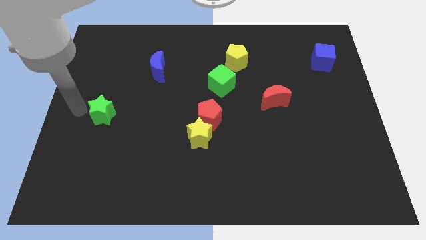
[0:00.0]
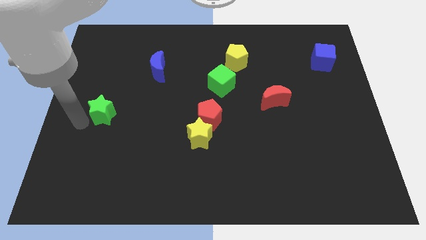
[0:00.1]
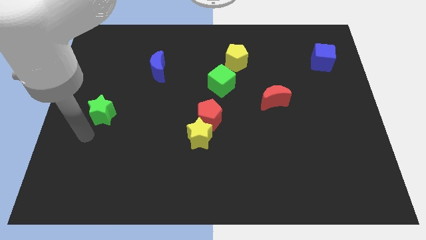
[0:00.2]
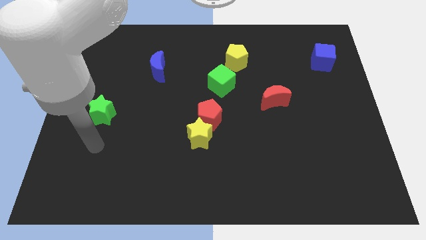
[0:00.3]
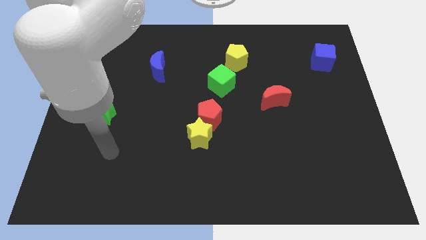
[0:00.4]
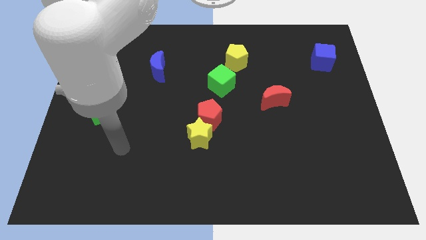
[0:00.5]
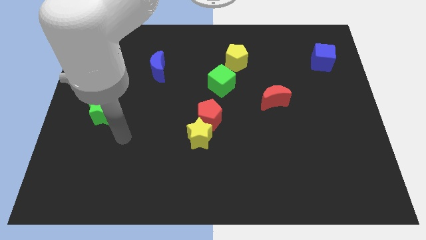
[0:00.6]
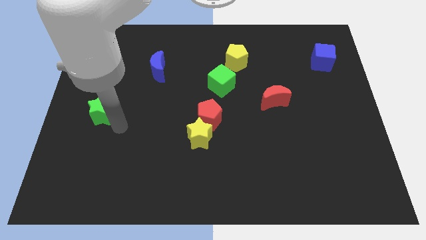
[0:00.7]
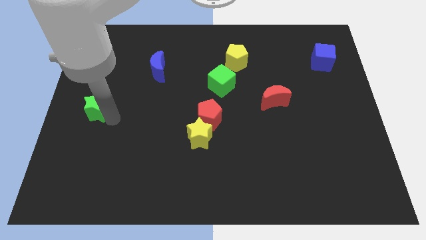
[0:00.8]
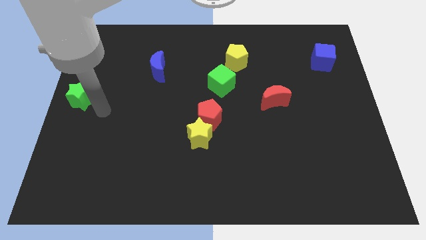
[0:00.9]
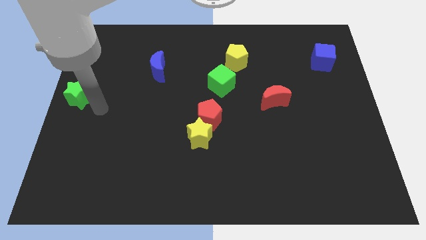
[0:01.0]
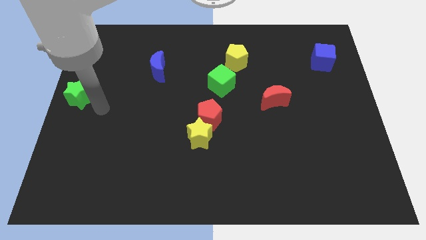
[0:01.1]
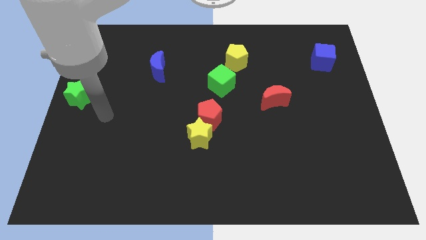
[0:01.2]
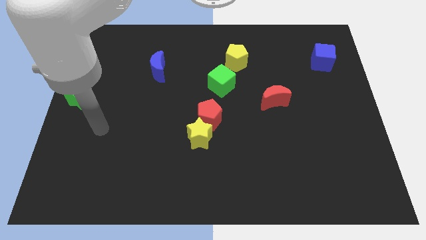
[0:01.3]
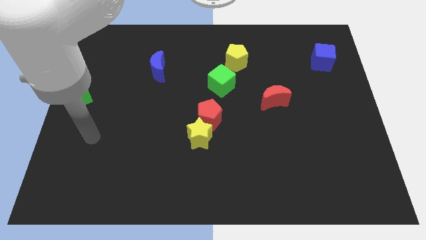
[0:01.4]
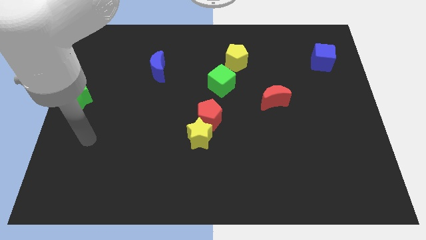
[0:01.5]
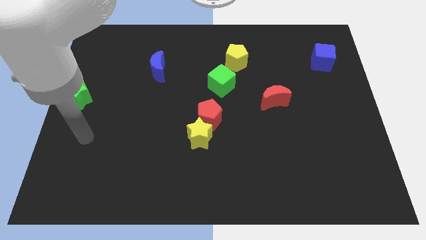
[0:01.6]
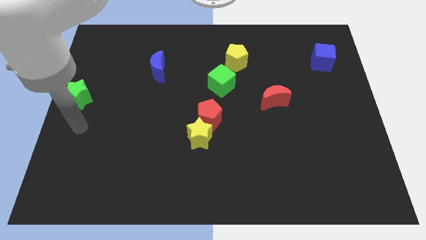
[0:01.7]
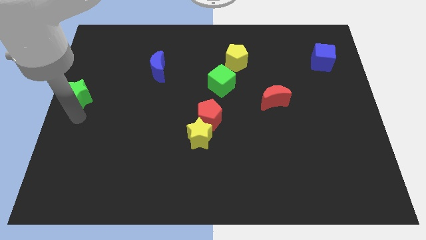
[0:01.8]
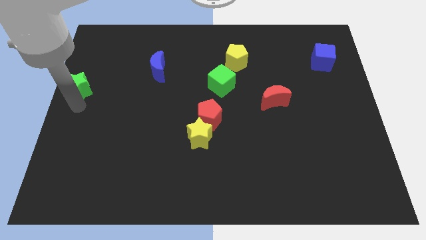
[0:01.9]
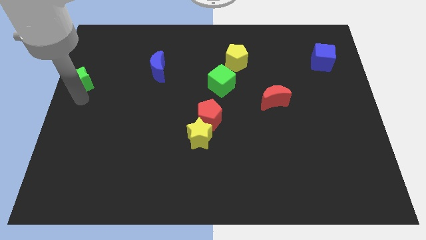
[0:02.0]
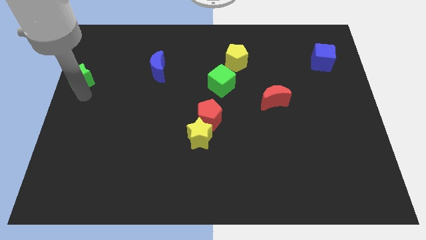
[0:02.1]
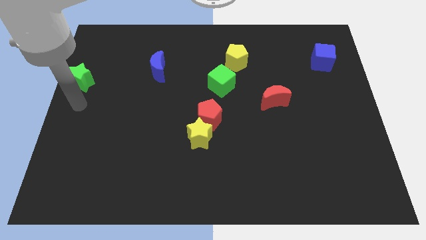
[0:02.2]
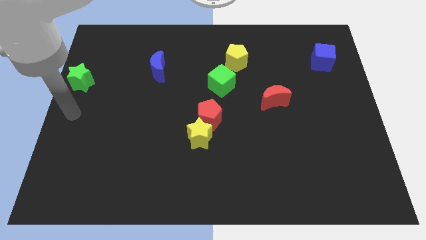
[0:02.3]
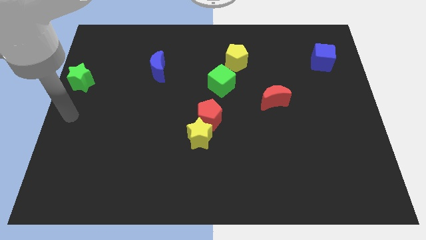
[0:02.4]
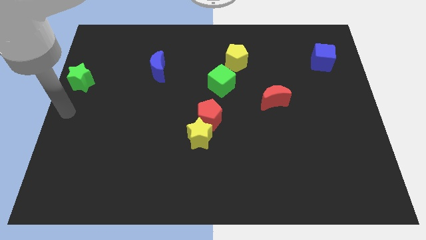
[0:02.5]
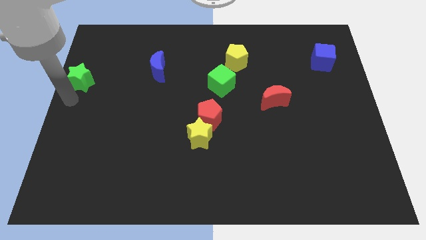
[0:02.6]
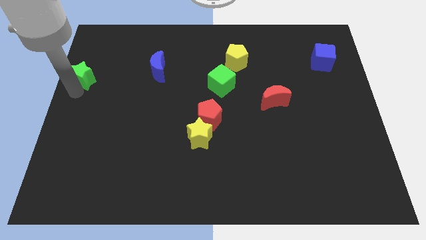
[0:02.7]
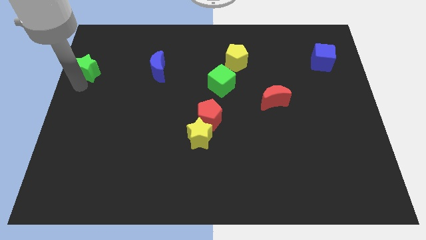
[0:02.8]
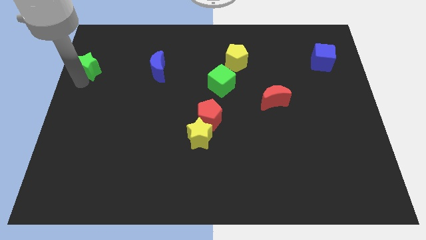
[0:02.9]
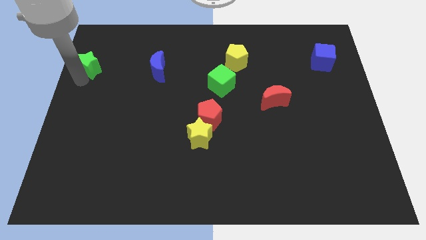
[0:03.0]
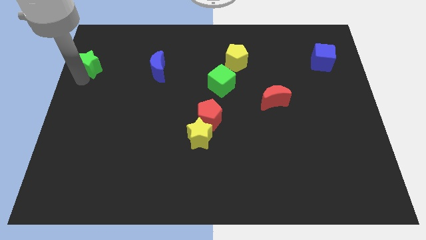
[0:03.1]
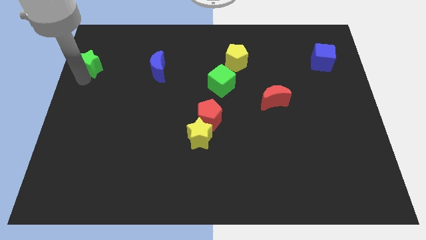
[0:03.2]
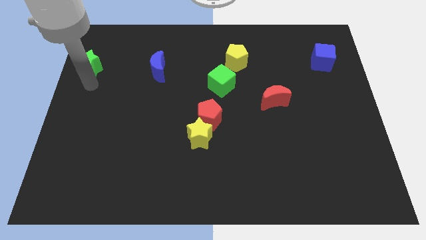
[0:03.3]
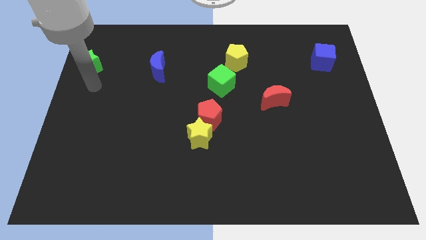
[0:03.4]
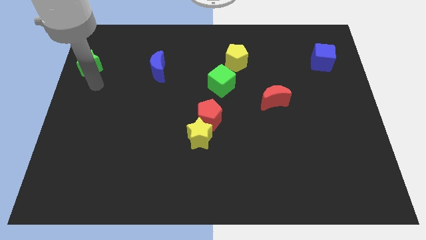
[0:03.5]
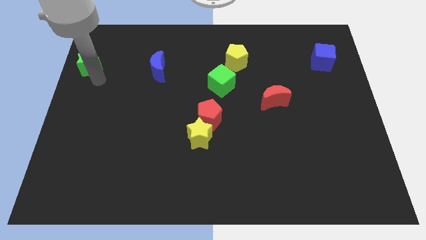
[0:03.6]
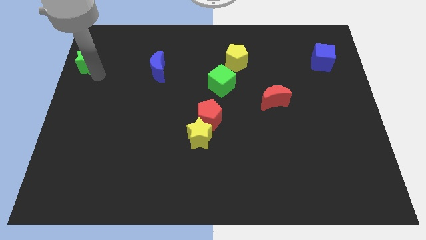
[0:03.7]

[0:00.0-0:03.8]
place green star to the left of blue moon

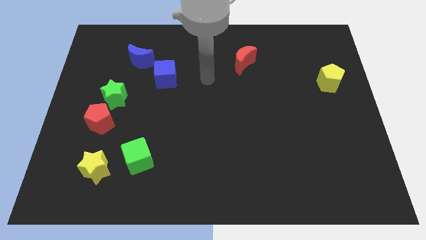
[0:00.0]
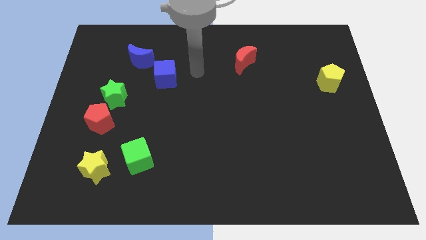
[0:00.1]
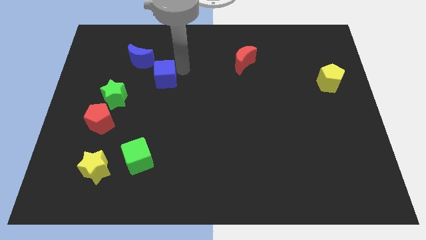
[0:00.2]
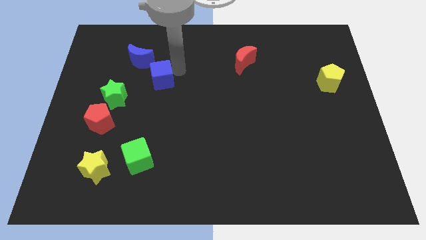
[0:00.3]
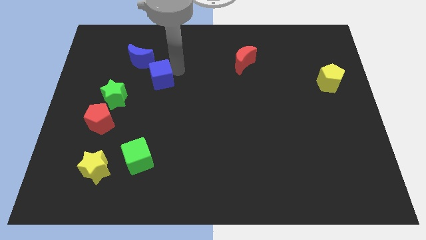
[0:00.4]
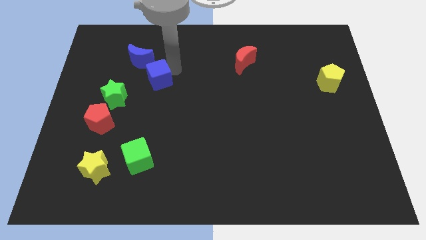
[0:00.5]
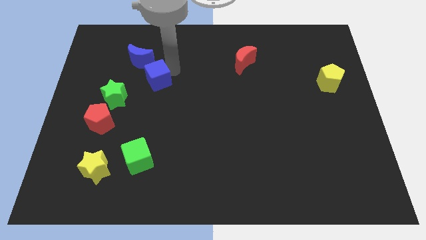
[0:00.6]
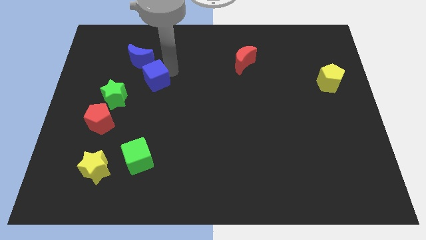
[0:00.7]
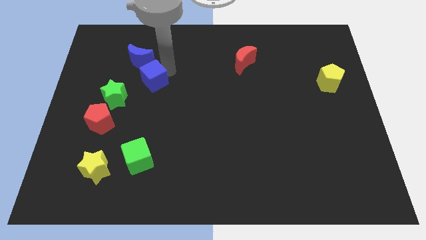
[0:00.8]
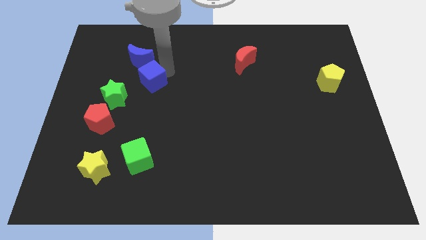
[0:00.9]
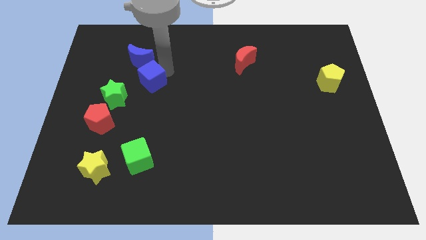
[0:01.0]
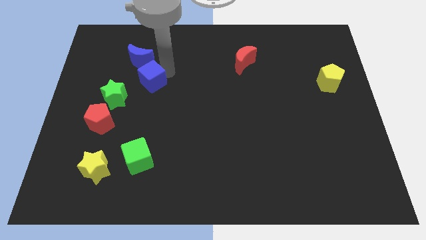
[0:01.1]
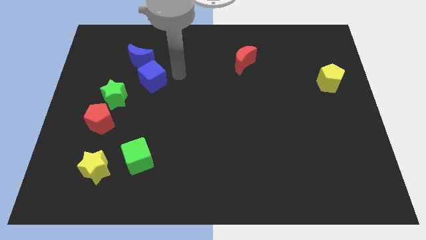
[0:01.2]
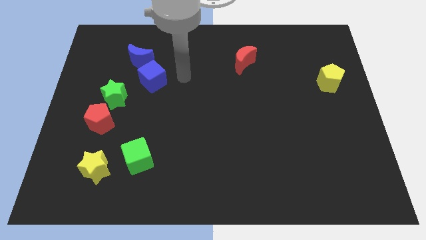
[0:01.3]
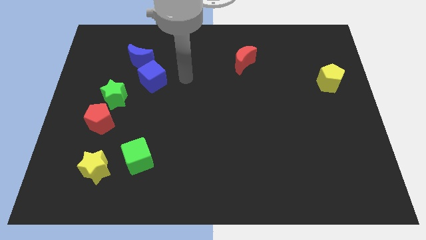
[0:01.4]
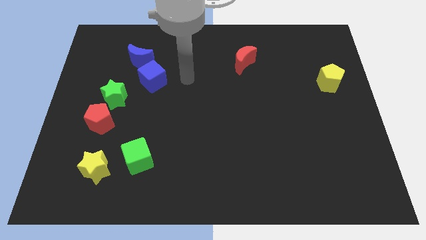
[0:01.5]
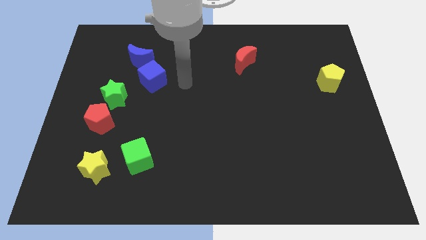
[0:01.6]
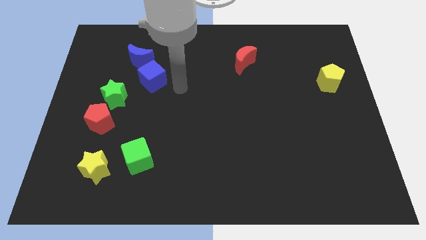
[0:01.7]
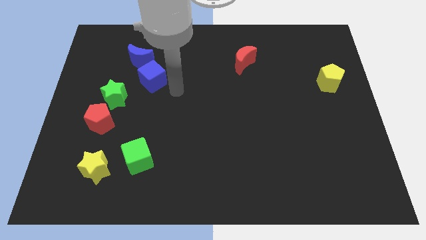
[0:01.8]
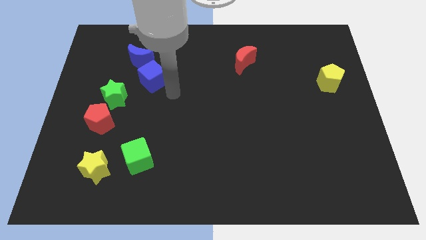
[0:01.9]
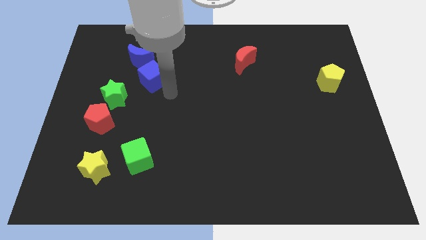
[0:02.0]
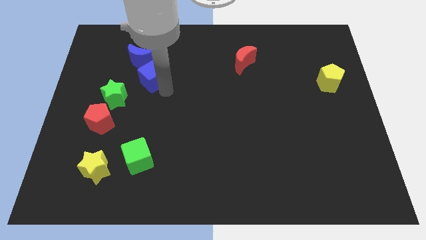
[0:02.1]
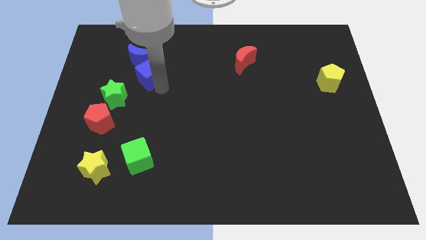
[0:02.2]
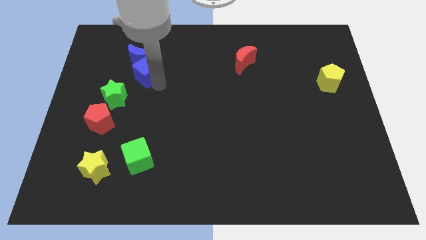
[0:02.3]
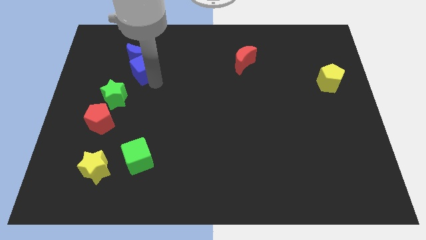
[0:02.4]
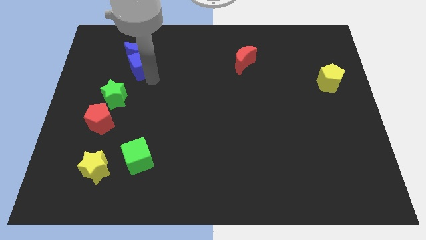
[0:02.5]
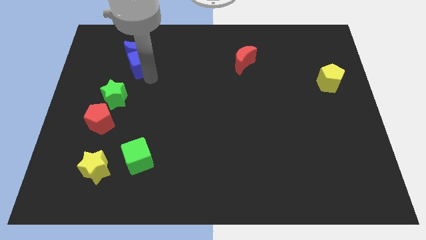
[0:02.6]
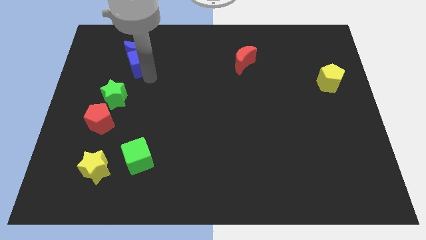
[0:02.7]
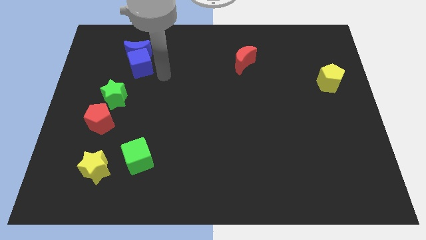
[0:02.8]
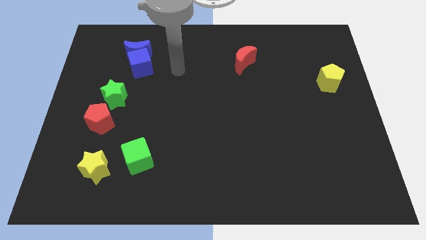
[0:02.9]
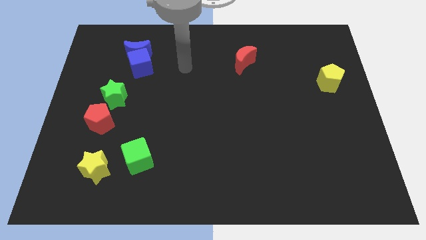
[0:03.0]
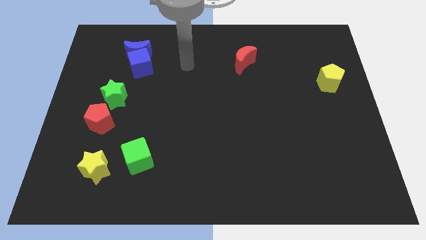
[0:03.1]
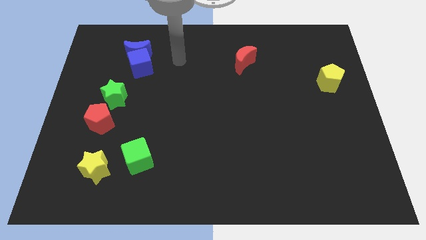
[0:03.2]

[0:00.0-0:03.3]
push the blue cube into the blue crescent

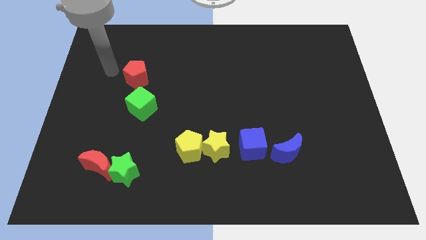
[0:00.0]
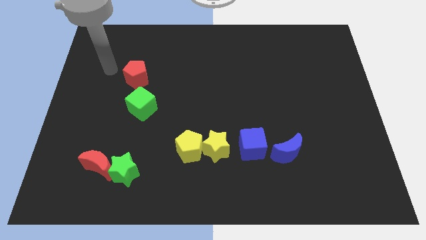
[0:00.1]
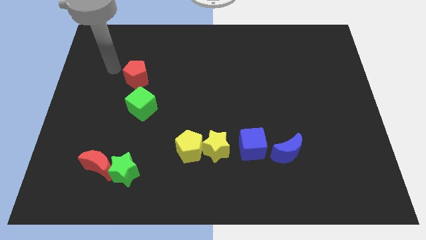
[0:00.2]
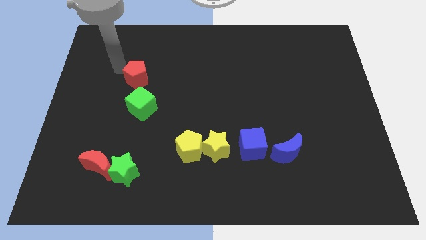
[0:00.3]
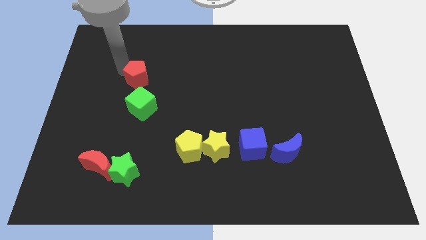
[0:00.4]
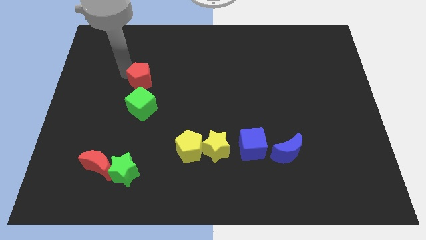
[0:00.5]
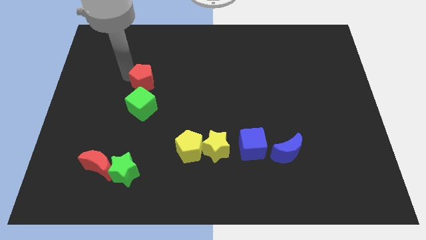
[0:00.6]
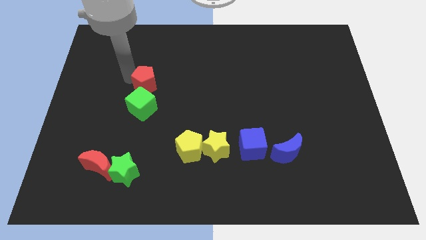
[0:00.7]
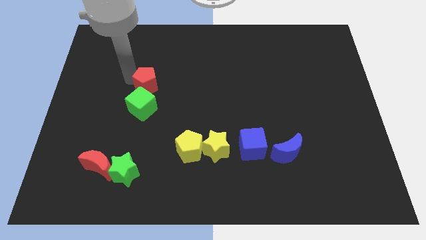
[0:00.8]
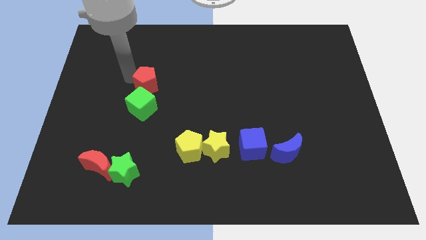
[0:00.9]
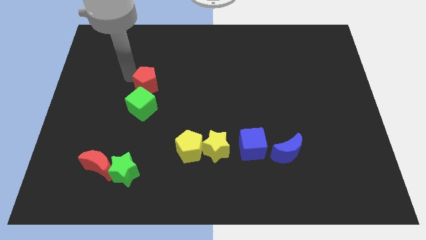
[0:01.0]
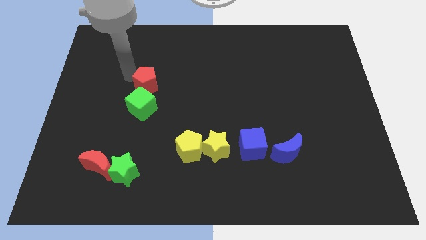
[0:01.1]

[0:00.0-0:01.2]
push the red pentagon and the green cube together

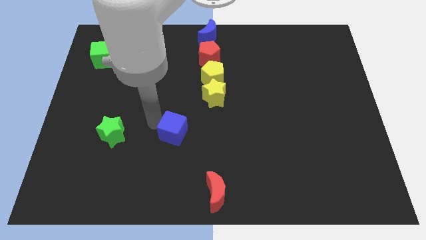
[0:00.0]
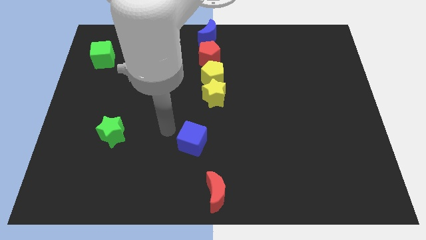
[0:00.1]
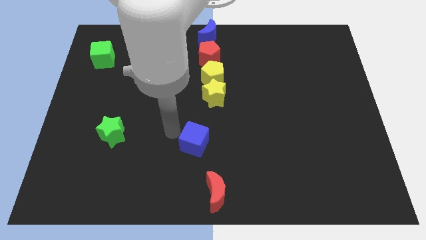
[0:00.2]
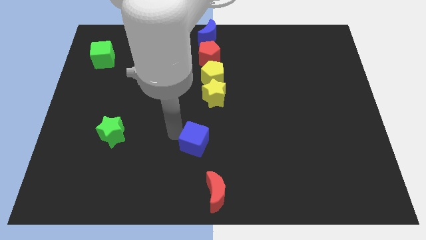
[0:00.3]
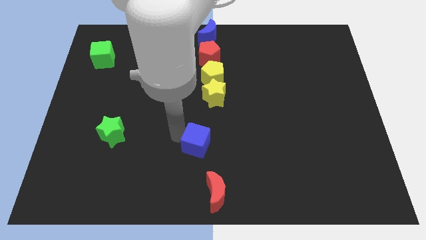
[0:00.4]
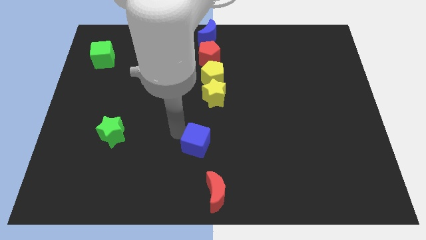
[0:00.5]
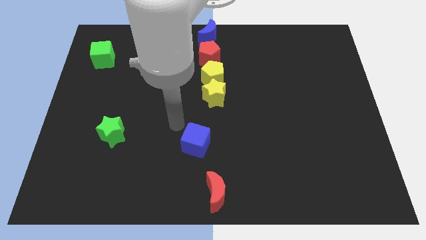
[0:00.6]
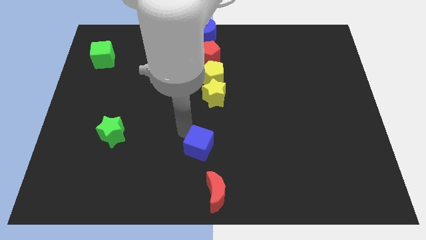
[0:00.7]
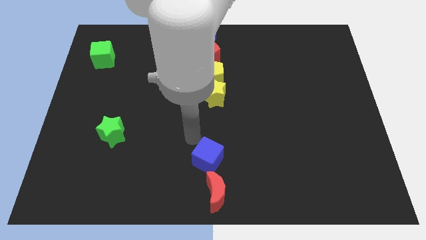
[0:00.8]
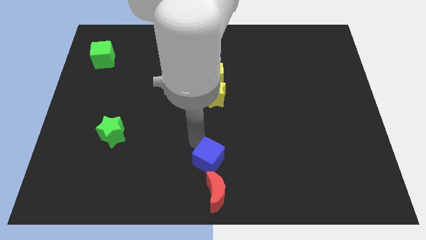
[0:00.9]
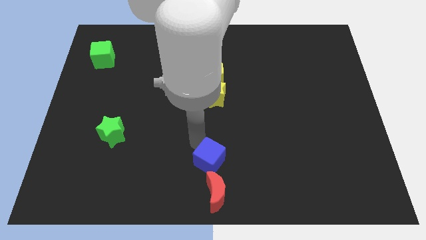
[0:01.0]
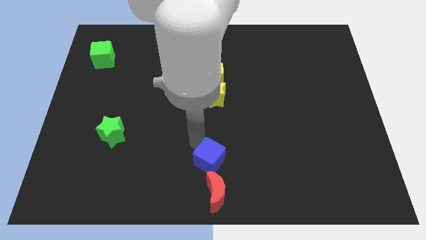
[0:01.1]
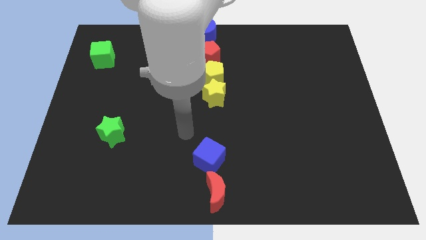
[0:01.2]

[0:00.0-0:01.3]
put the blue cube above the red crescent
